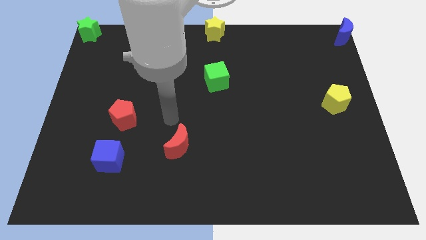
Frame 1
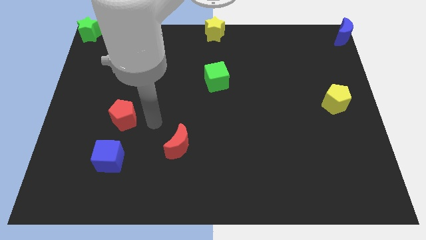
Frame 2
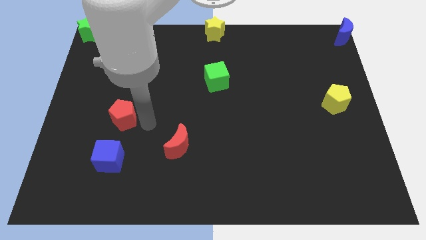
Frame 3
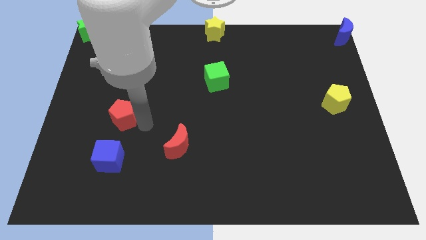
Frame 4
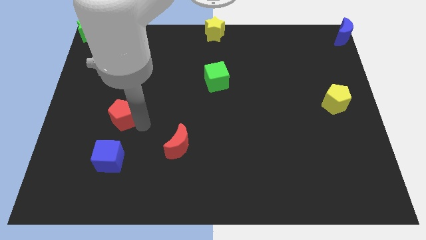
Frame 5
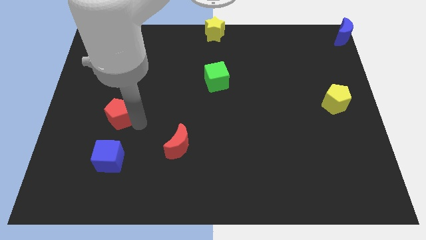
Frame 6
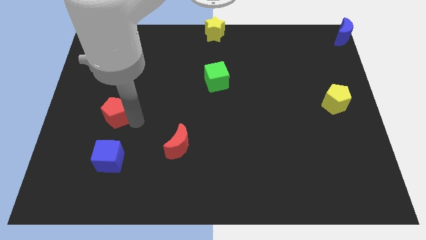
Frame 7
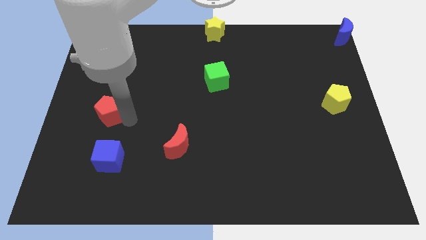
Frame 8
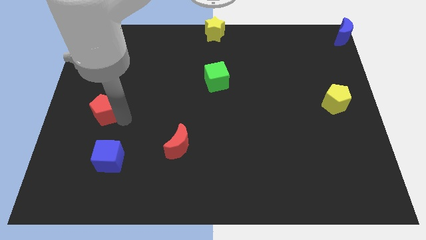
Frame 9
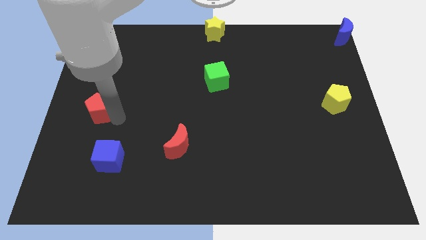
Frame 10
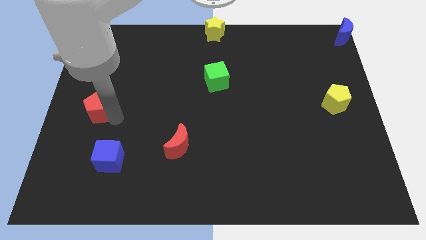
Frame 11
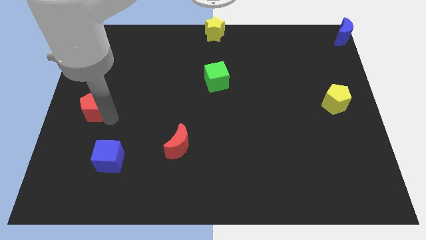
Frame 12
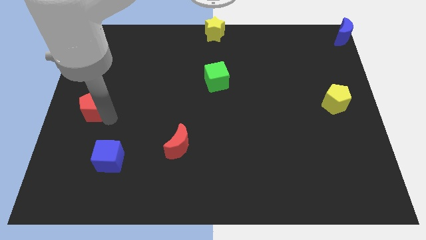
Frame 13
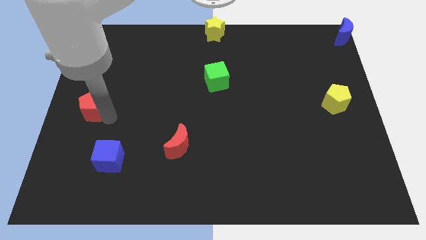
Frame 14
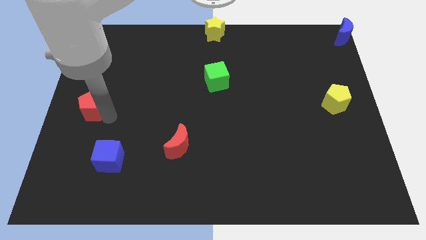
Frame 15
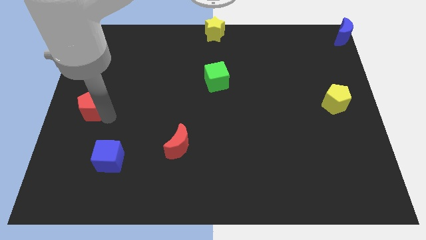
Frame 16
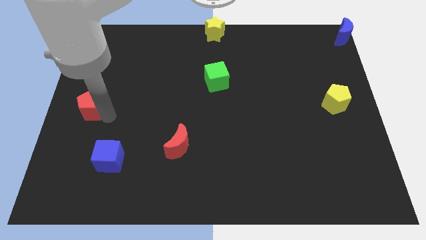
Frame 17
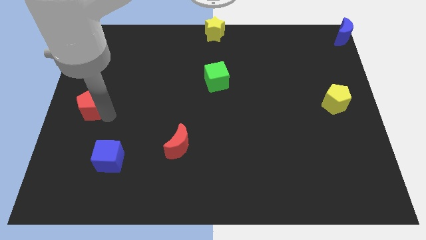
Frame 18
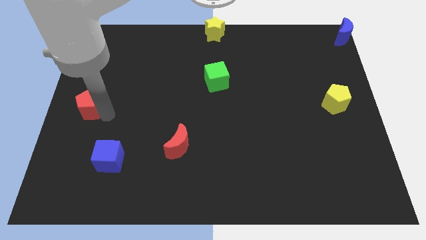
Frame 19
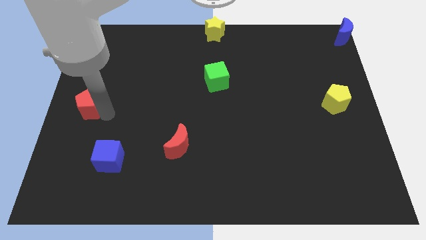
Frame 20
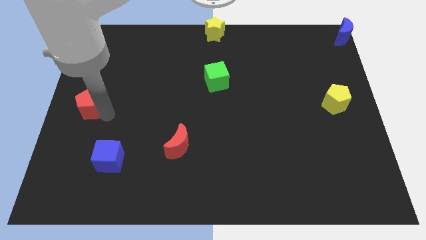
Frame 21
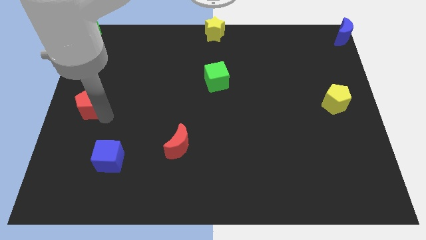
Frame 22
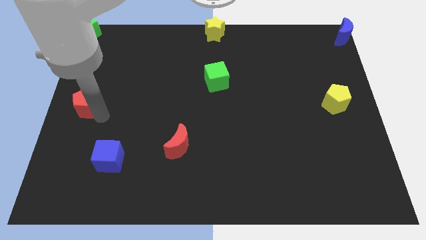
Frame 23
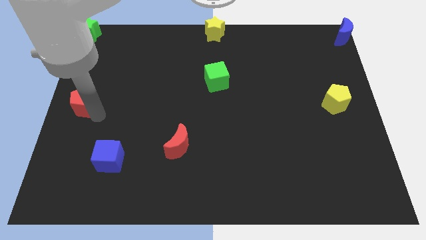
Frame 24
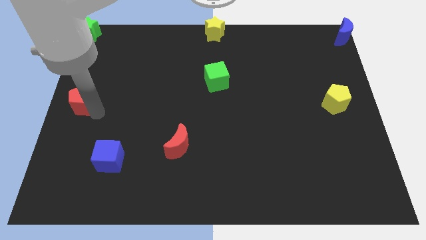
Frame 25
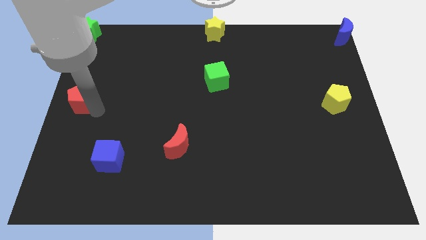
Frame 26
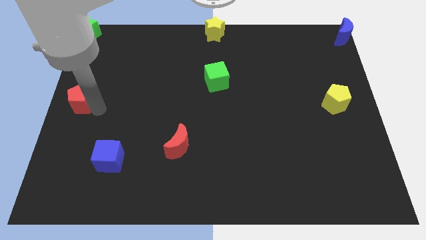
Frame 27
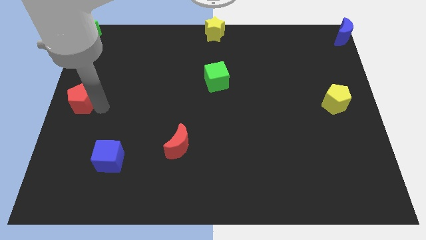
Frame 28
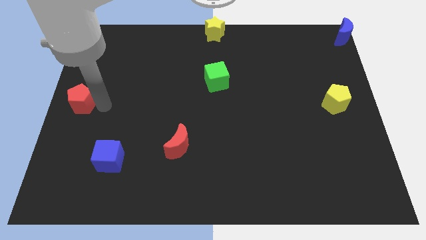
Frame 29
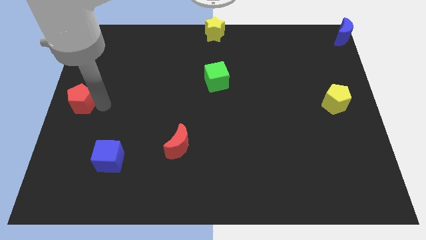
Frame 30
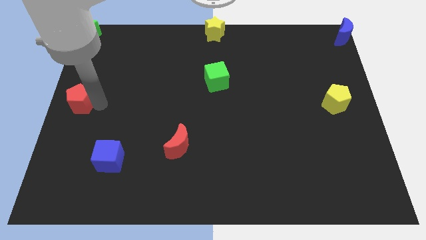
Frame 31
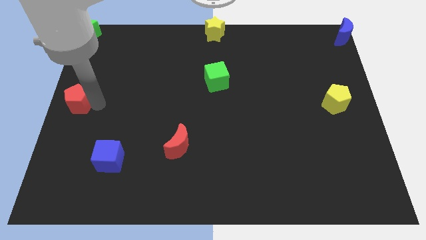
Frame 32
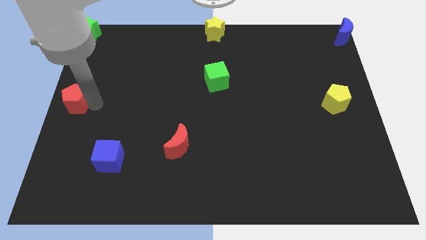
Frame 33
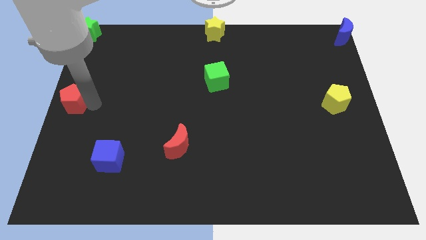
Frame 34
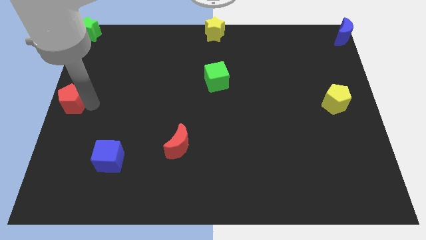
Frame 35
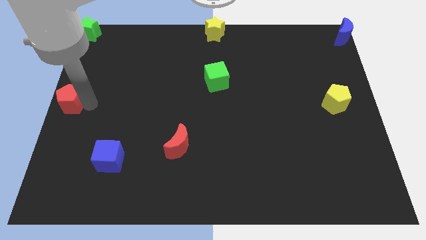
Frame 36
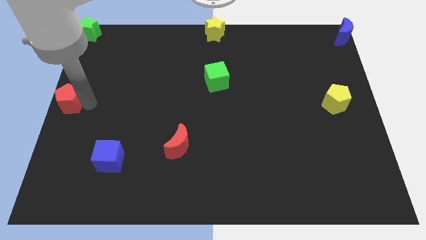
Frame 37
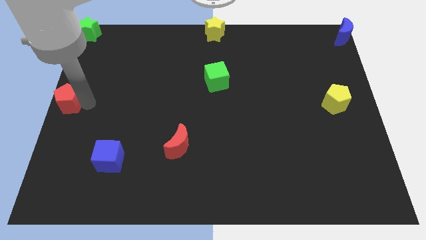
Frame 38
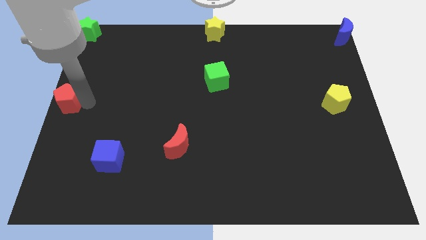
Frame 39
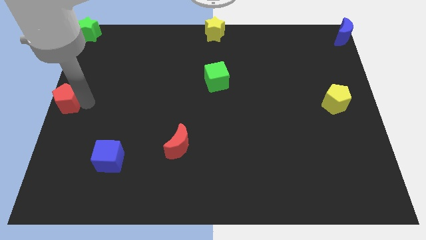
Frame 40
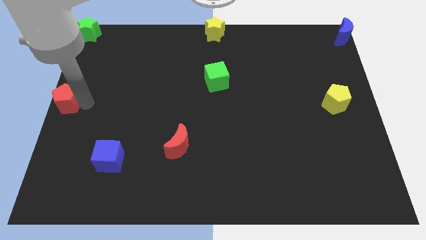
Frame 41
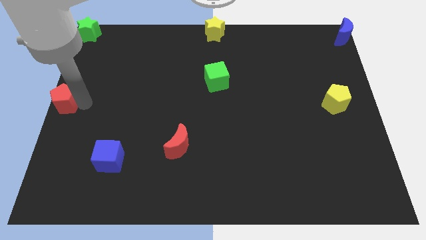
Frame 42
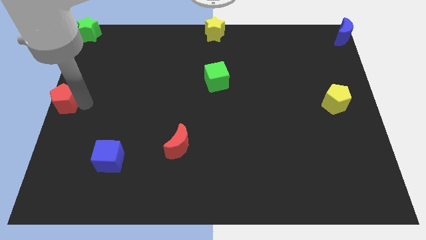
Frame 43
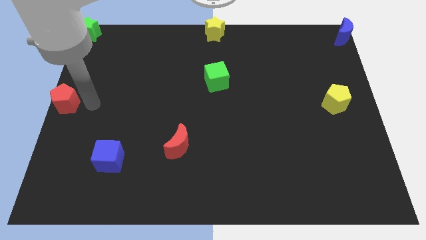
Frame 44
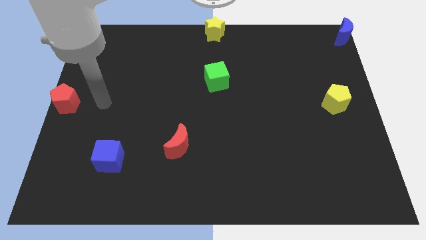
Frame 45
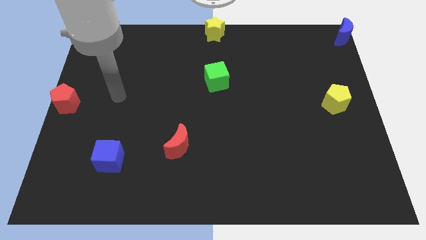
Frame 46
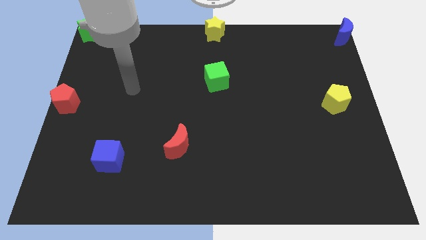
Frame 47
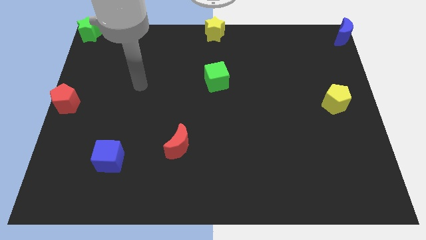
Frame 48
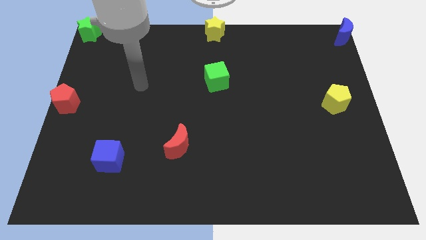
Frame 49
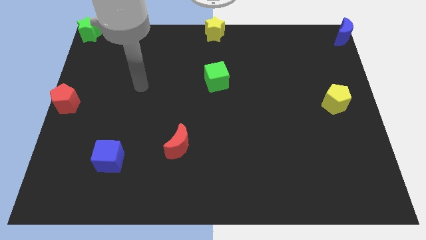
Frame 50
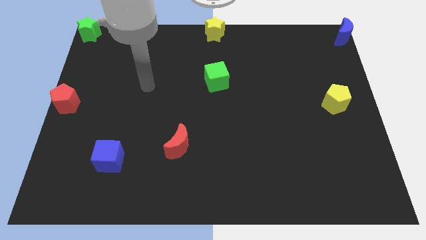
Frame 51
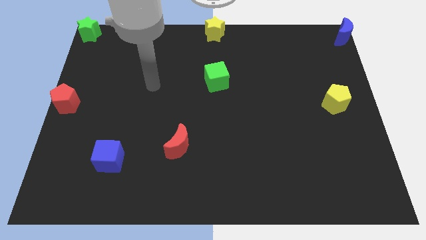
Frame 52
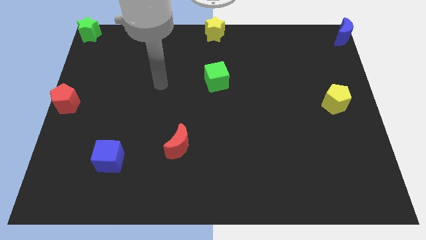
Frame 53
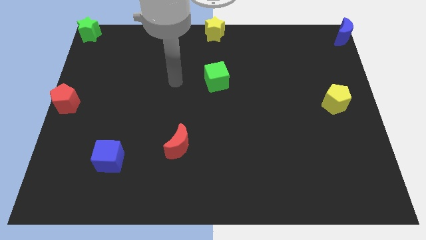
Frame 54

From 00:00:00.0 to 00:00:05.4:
move the red pentagon to the center left

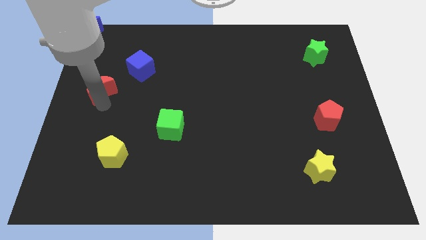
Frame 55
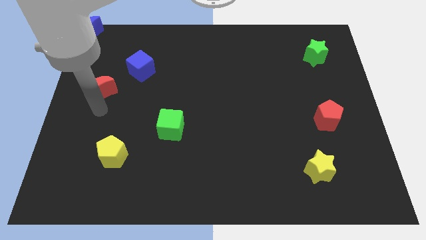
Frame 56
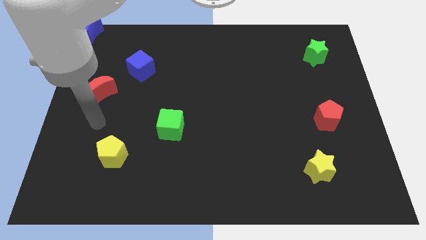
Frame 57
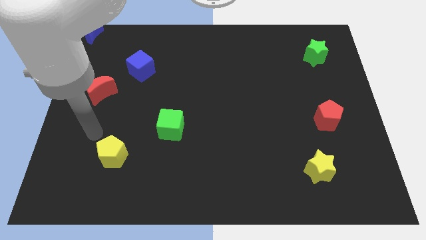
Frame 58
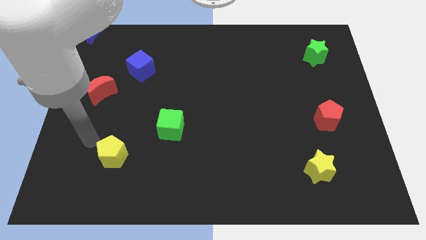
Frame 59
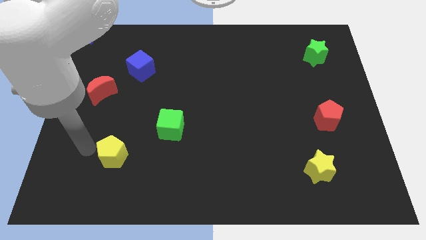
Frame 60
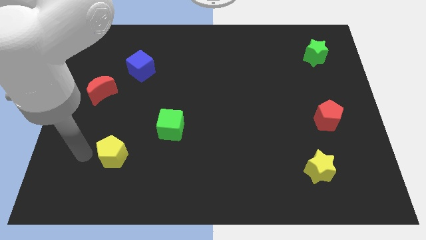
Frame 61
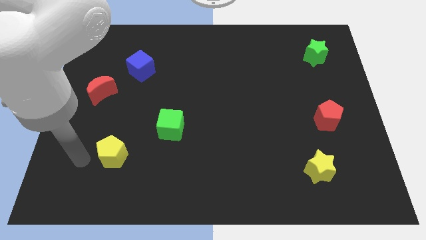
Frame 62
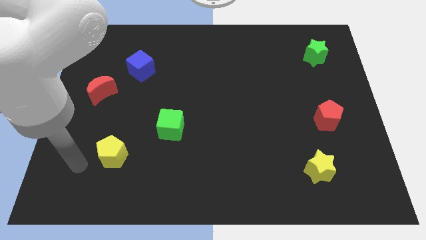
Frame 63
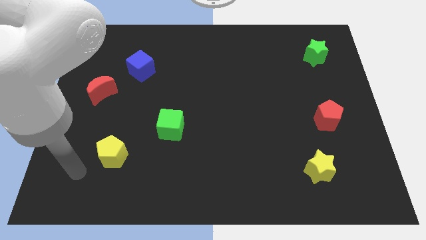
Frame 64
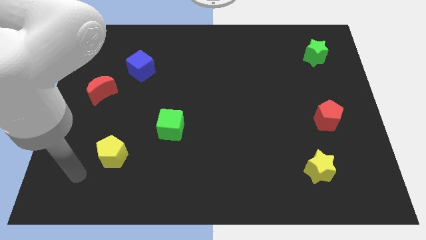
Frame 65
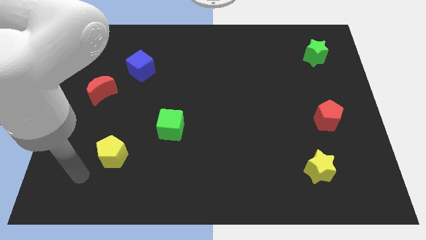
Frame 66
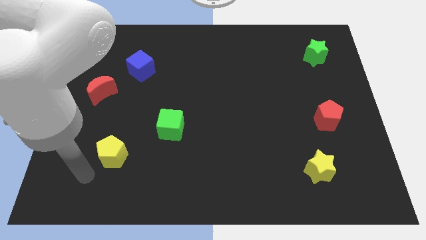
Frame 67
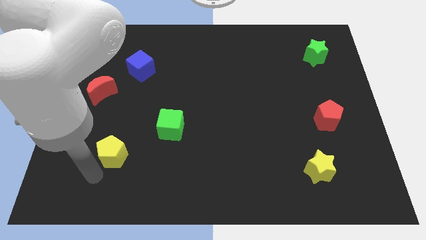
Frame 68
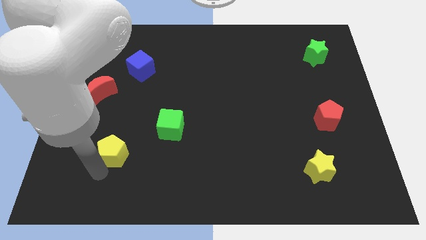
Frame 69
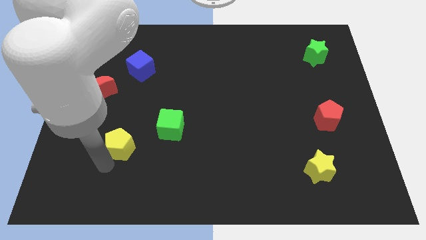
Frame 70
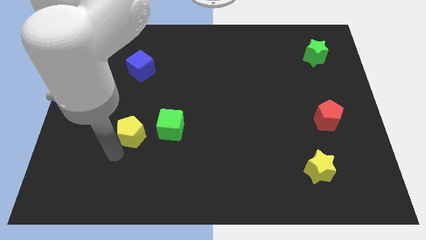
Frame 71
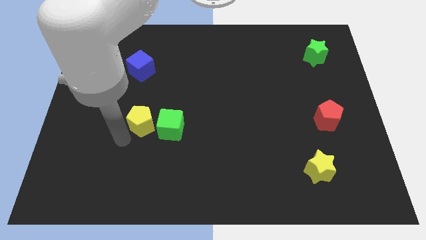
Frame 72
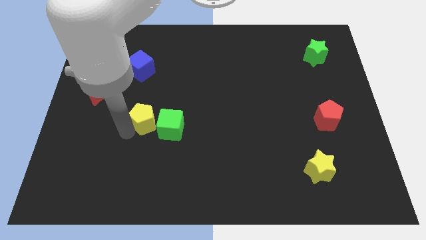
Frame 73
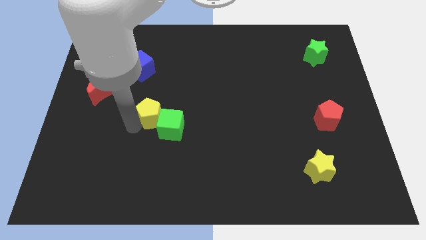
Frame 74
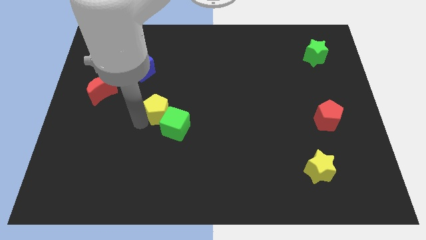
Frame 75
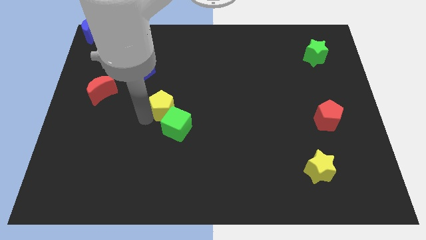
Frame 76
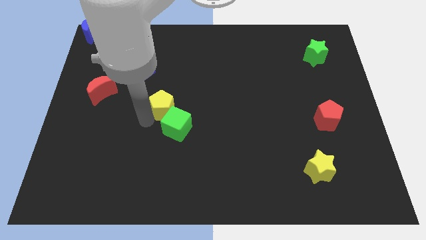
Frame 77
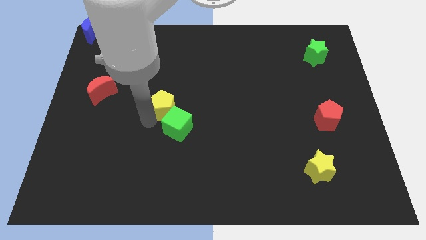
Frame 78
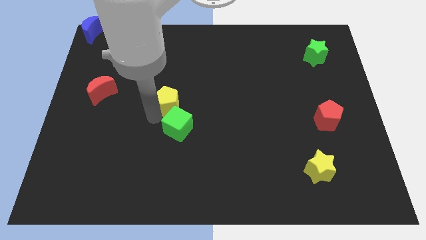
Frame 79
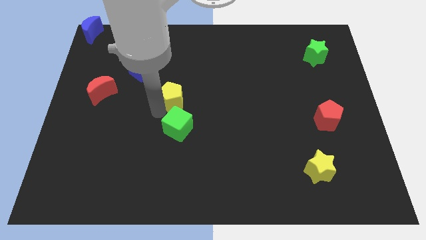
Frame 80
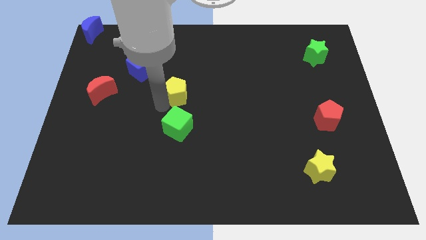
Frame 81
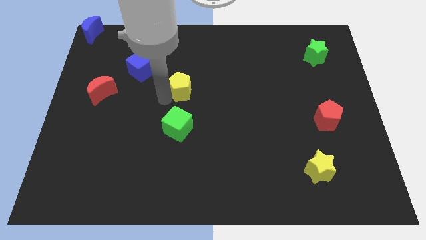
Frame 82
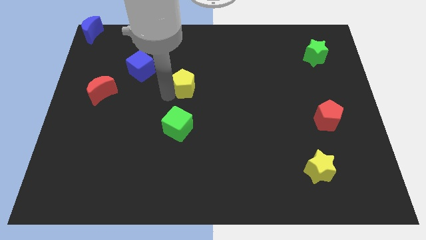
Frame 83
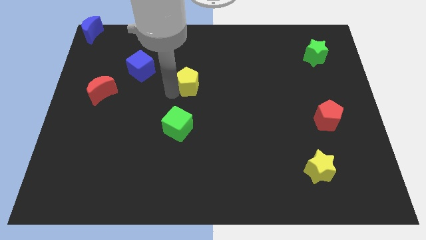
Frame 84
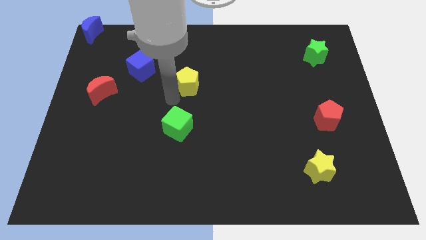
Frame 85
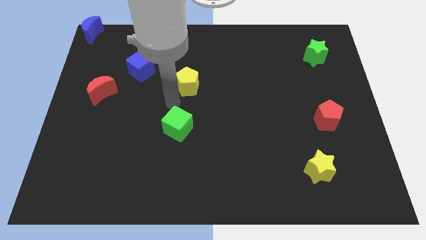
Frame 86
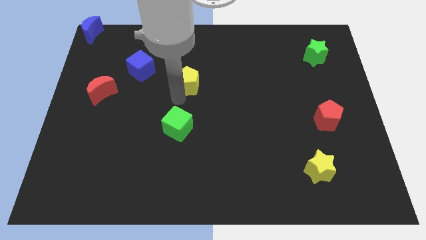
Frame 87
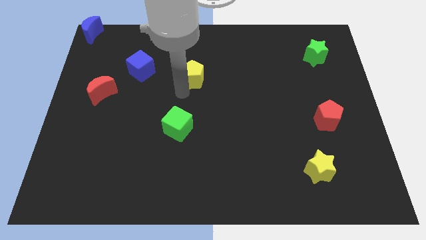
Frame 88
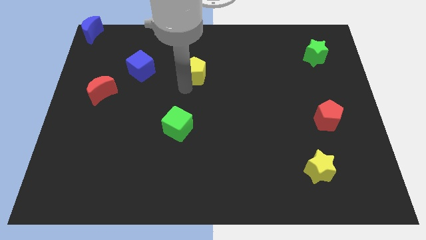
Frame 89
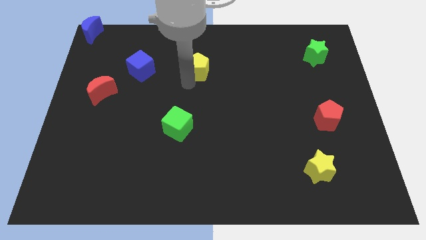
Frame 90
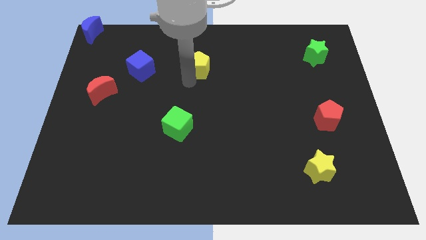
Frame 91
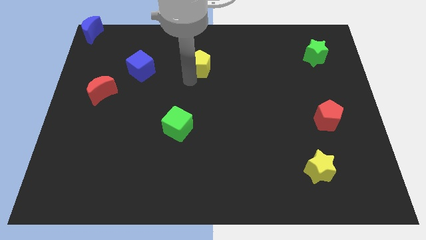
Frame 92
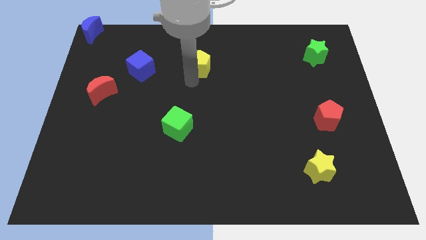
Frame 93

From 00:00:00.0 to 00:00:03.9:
place the yellow pentagon to the right of the blue cube
